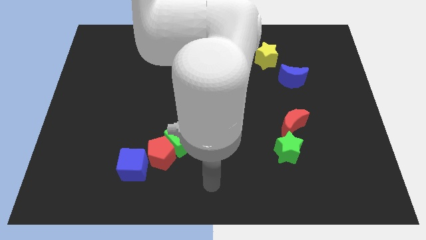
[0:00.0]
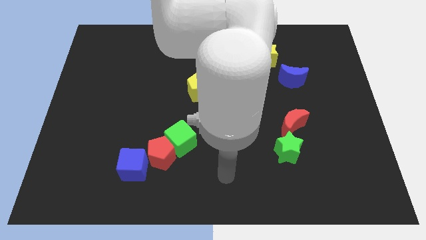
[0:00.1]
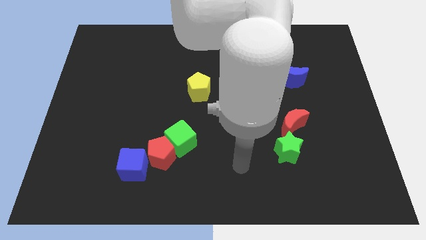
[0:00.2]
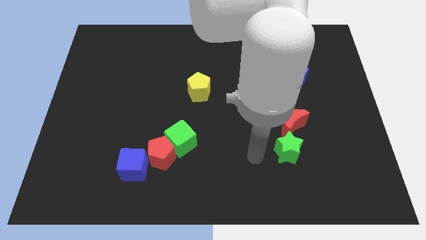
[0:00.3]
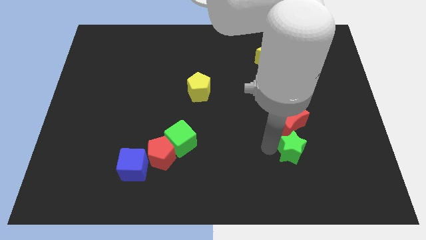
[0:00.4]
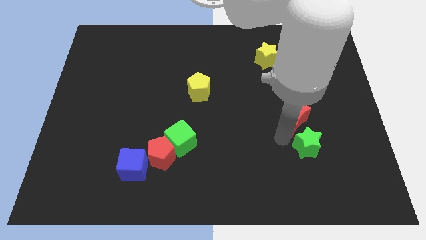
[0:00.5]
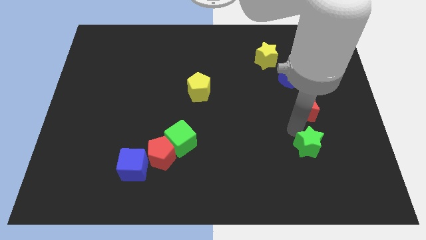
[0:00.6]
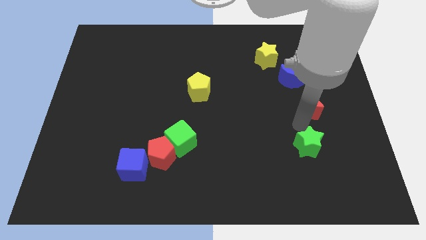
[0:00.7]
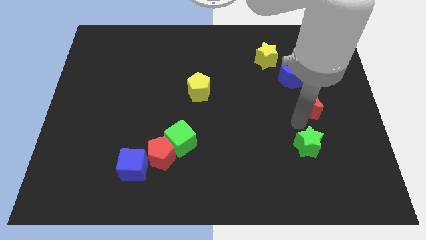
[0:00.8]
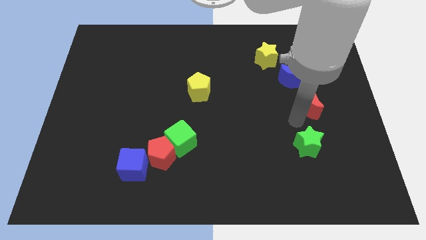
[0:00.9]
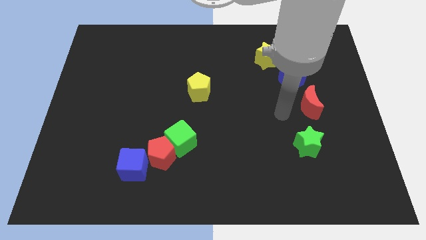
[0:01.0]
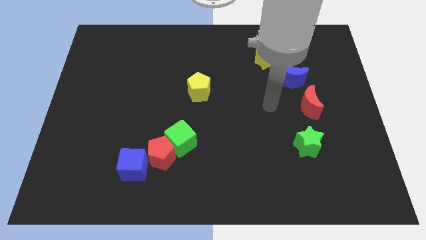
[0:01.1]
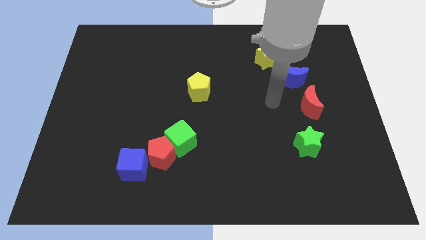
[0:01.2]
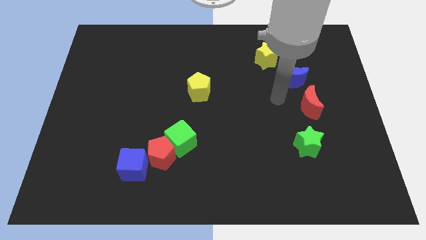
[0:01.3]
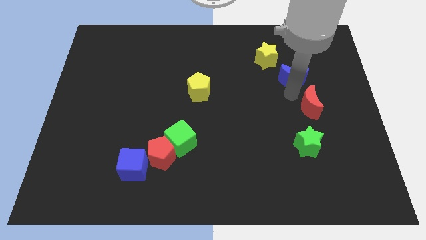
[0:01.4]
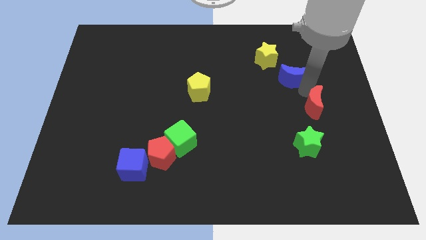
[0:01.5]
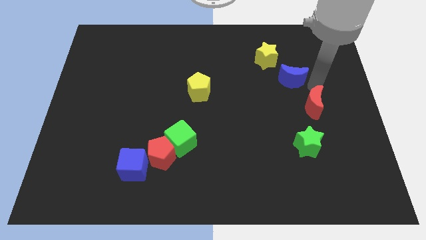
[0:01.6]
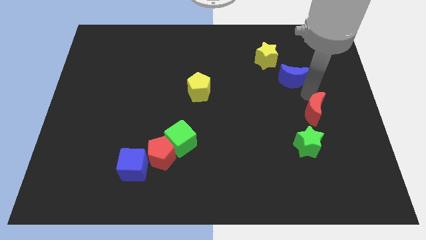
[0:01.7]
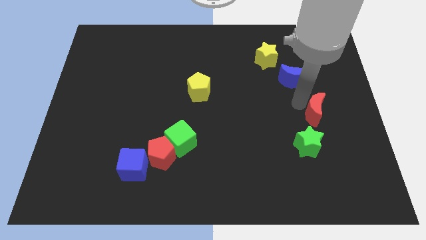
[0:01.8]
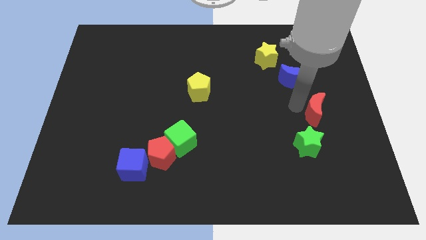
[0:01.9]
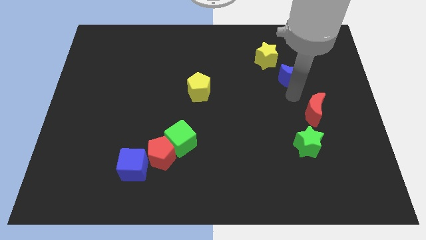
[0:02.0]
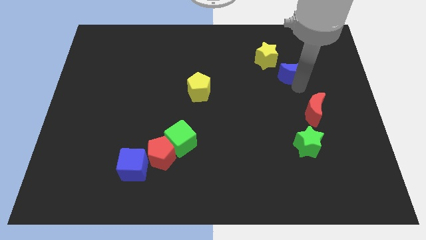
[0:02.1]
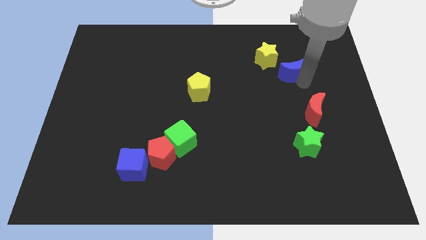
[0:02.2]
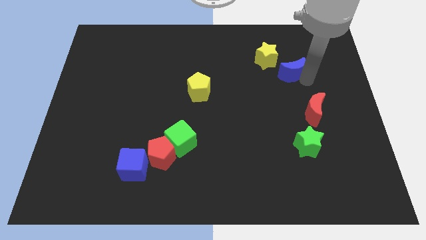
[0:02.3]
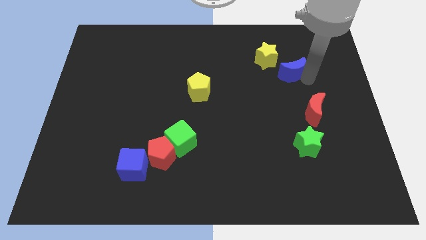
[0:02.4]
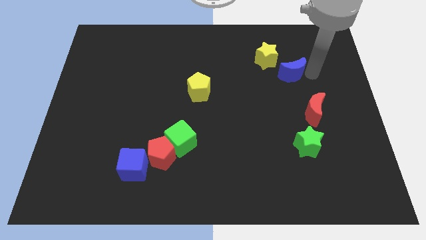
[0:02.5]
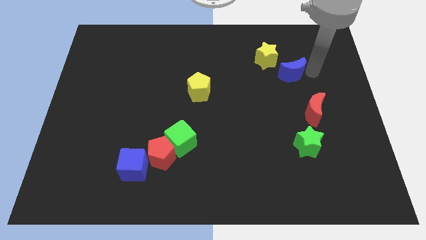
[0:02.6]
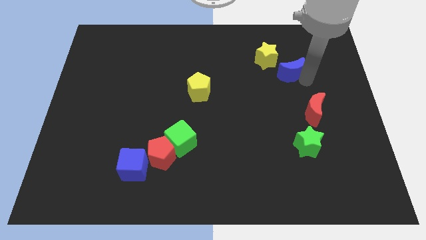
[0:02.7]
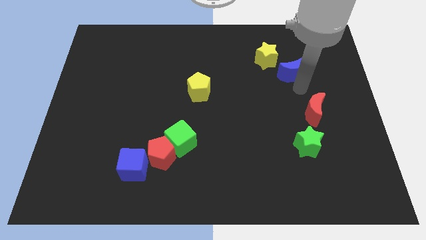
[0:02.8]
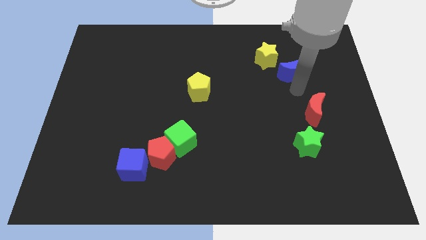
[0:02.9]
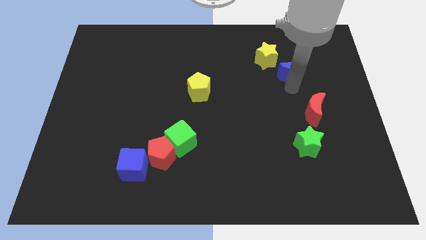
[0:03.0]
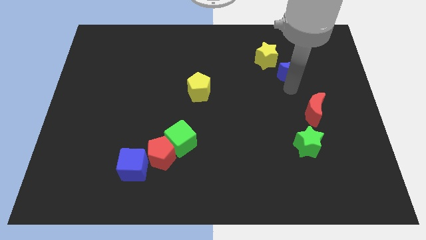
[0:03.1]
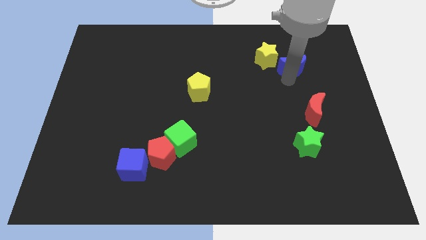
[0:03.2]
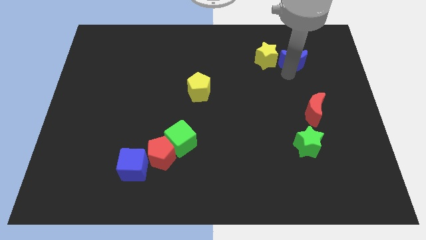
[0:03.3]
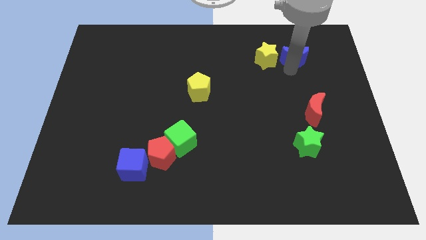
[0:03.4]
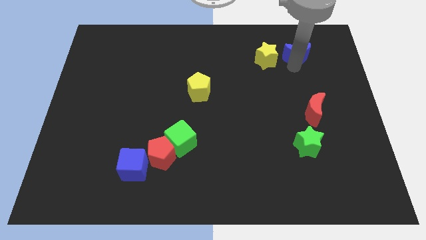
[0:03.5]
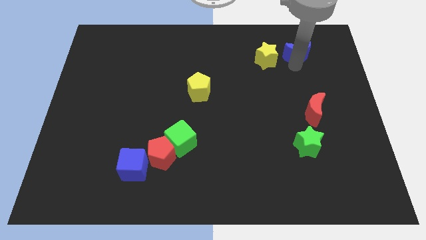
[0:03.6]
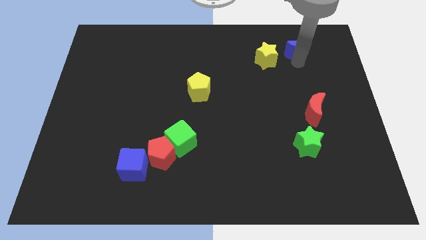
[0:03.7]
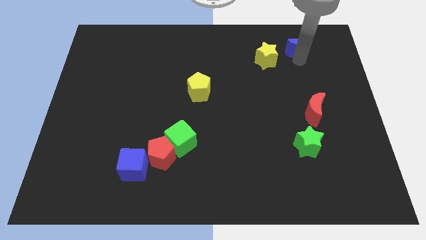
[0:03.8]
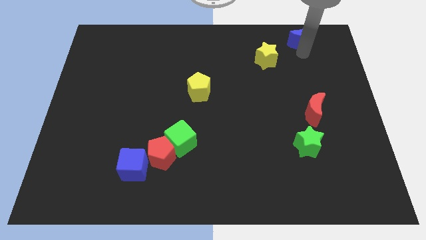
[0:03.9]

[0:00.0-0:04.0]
move the blue moon diagonal top right to yellow star

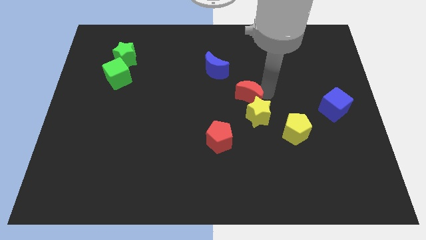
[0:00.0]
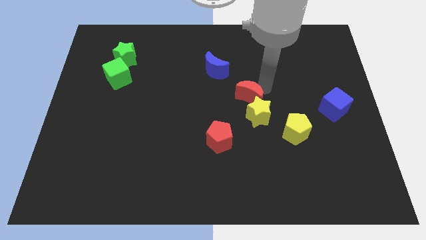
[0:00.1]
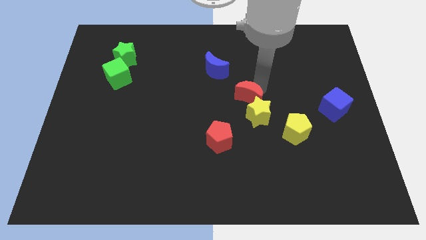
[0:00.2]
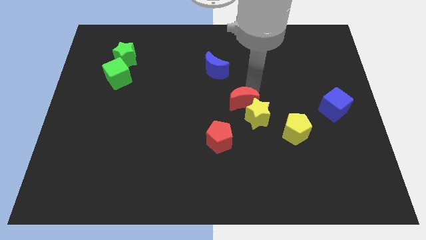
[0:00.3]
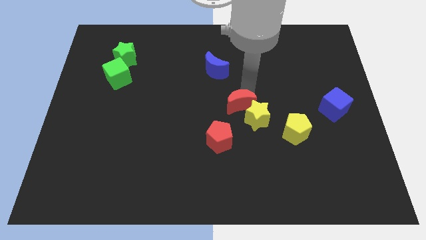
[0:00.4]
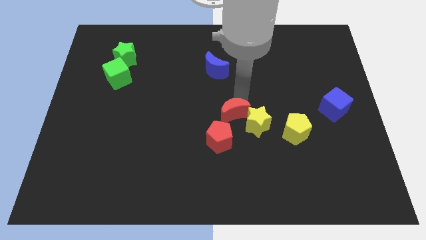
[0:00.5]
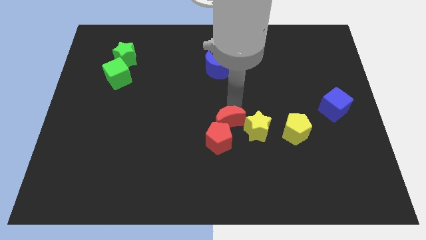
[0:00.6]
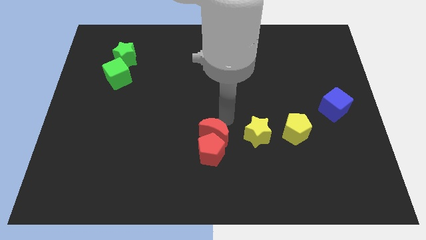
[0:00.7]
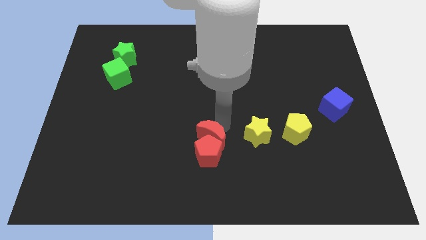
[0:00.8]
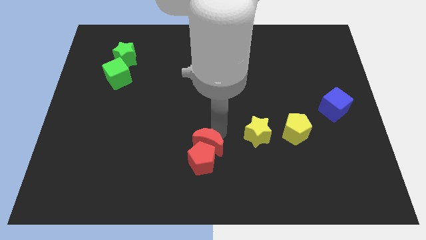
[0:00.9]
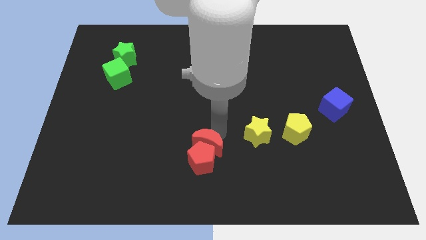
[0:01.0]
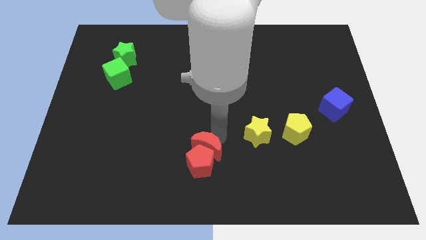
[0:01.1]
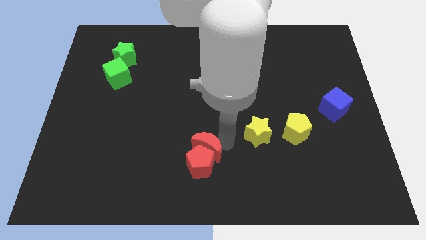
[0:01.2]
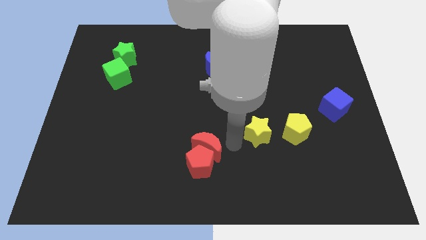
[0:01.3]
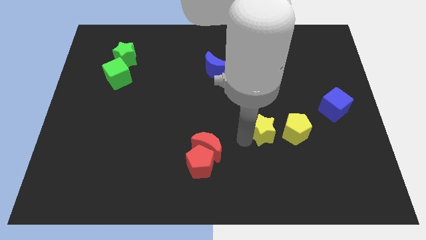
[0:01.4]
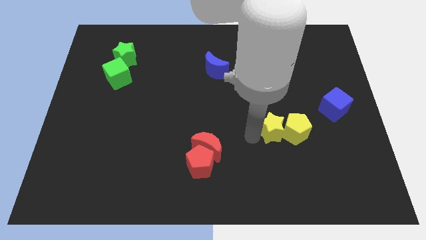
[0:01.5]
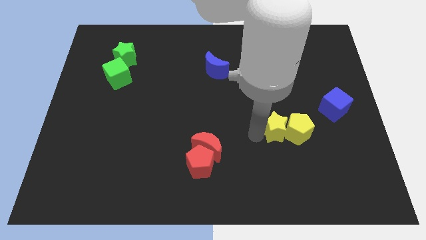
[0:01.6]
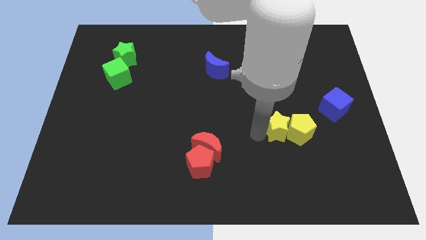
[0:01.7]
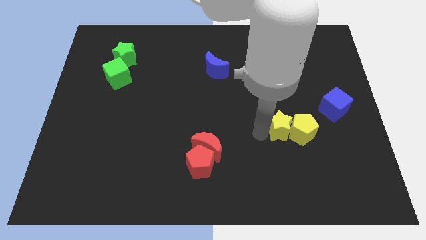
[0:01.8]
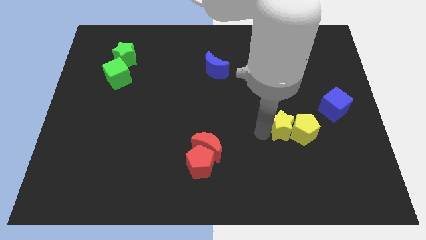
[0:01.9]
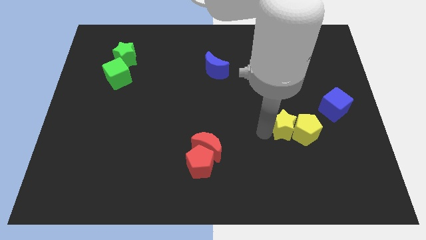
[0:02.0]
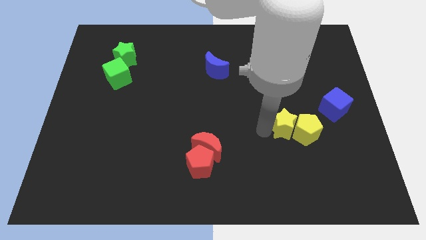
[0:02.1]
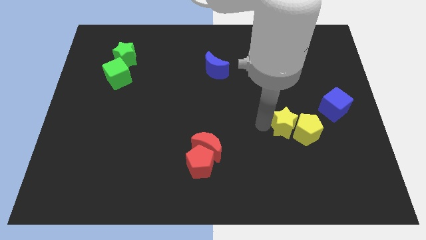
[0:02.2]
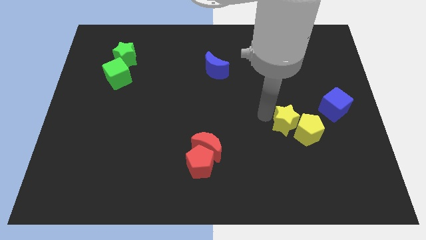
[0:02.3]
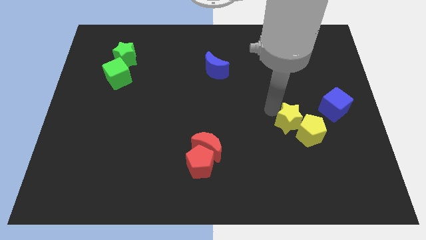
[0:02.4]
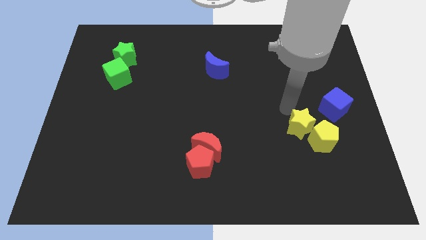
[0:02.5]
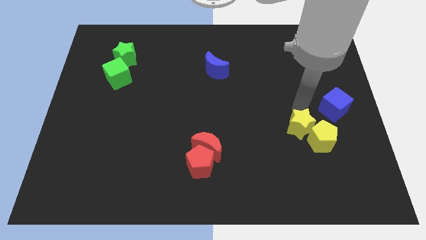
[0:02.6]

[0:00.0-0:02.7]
push the yellow blocks diagonal to the blue cube

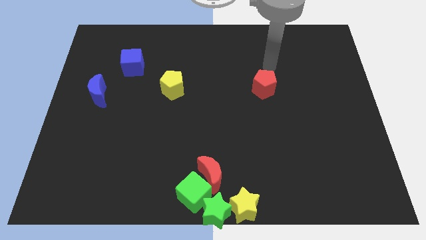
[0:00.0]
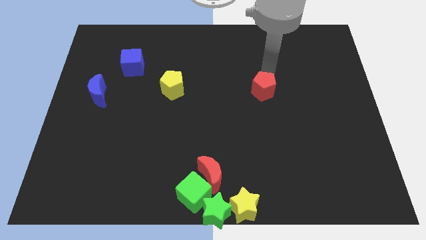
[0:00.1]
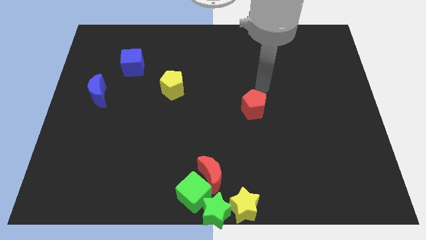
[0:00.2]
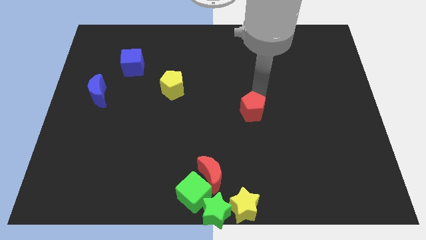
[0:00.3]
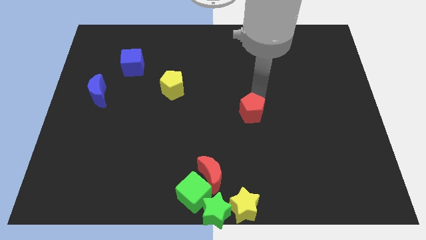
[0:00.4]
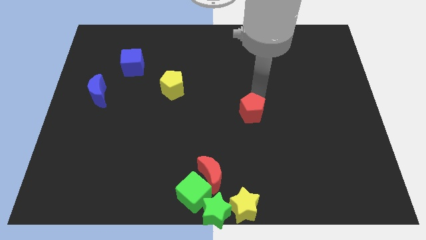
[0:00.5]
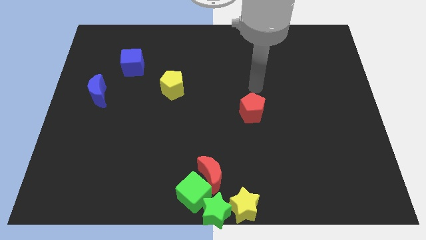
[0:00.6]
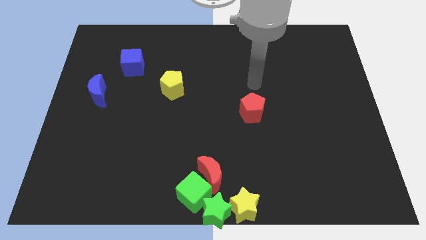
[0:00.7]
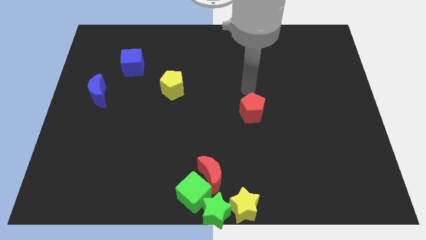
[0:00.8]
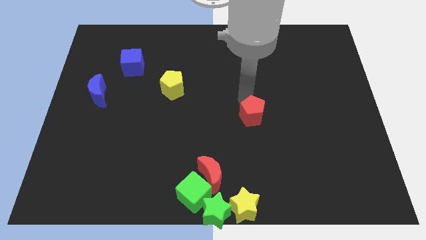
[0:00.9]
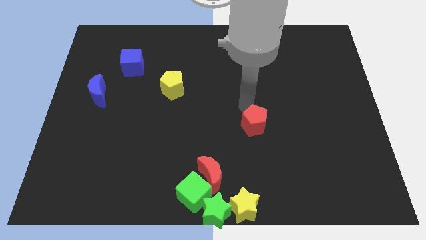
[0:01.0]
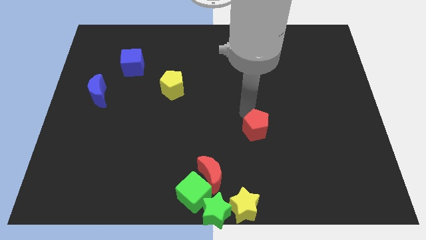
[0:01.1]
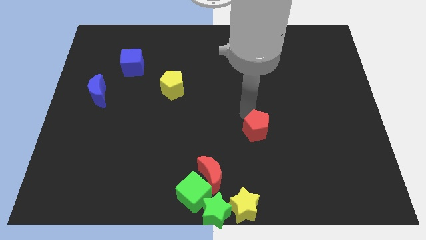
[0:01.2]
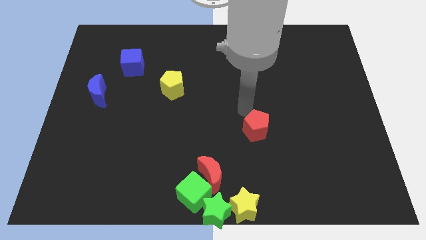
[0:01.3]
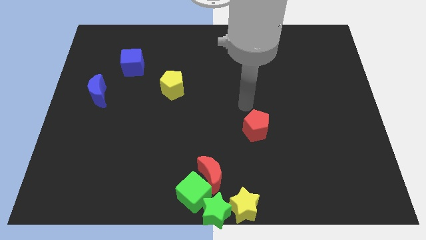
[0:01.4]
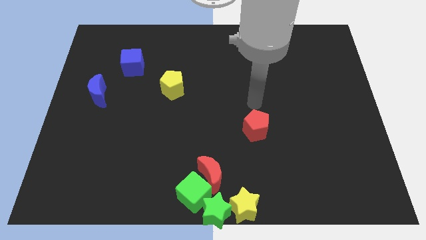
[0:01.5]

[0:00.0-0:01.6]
push the red pentagon diagonally top right to red moon

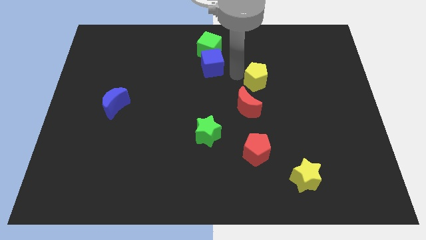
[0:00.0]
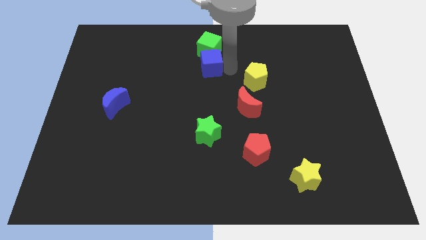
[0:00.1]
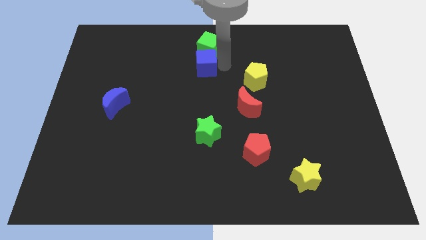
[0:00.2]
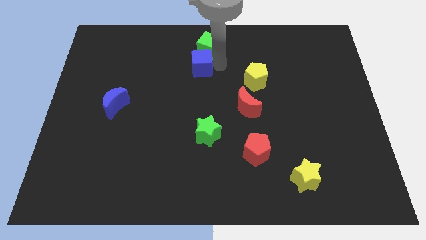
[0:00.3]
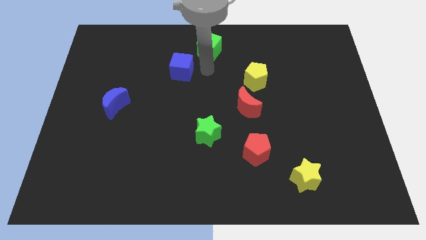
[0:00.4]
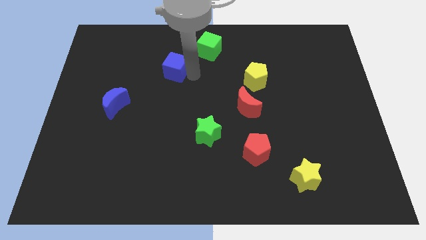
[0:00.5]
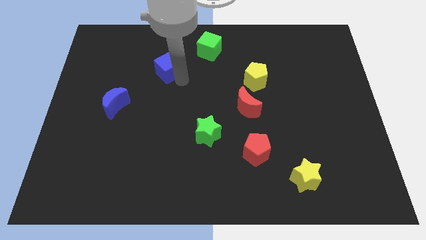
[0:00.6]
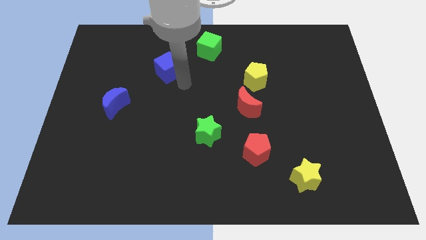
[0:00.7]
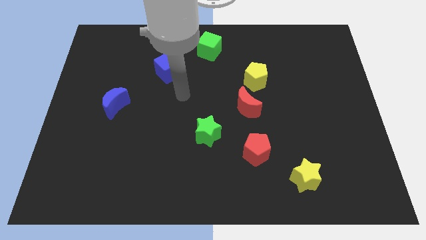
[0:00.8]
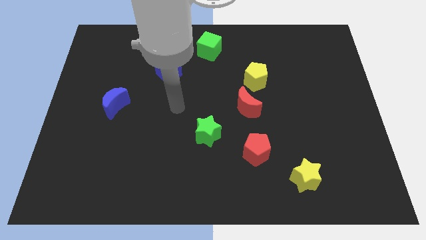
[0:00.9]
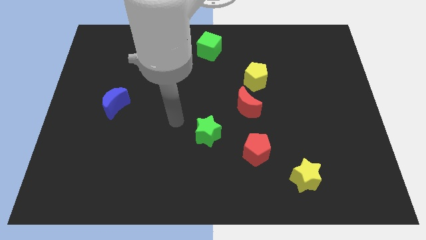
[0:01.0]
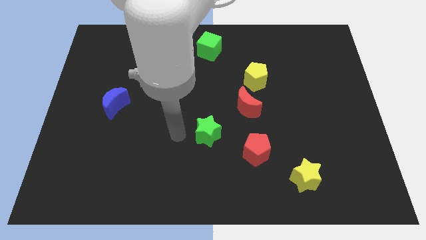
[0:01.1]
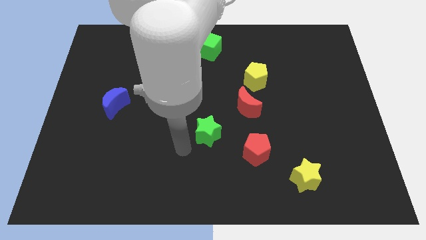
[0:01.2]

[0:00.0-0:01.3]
slightly push the blue cube between blue moon and green cube
